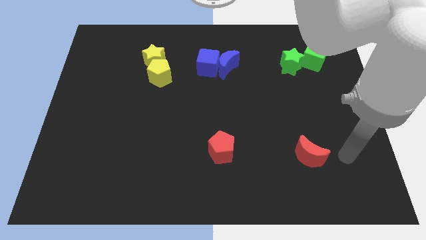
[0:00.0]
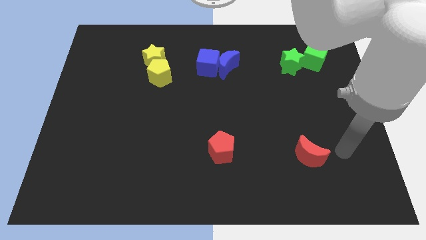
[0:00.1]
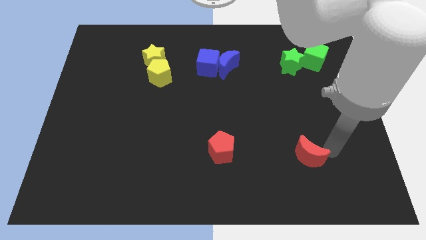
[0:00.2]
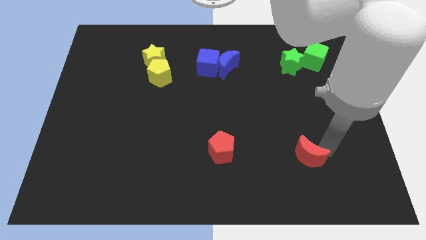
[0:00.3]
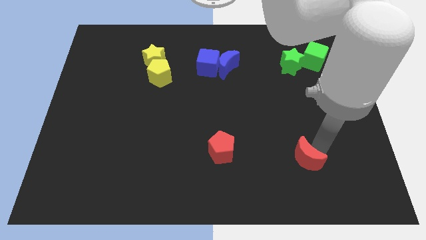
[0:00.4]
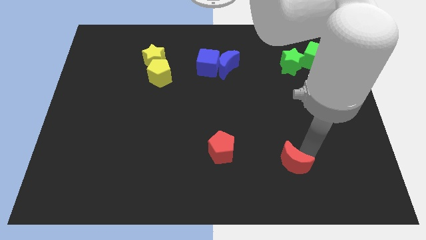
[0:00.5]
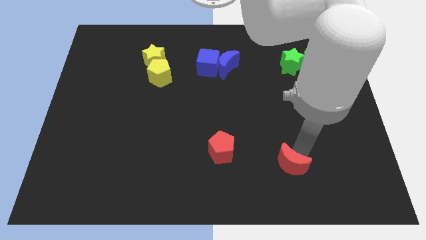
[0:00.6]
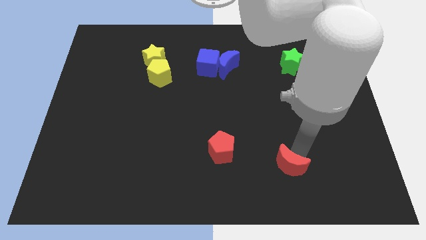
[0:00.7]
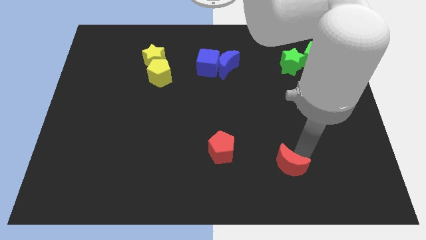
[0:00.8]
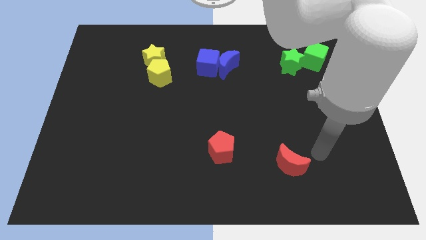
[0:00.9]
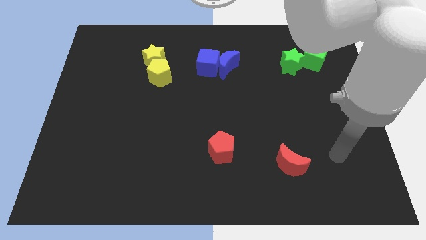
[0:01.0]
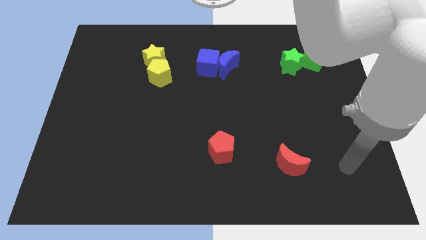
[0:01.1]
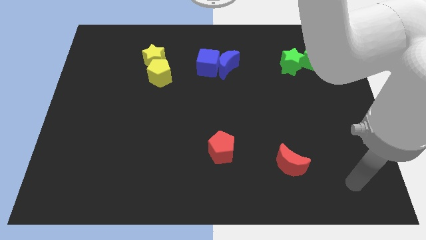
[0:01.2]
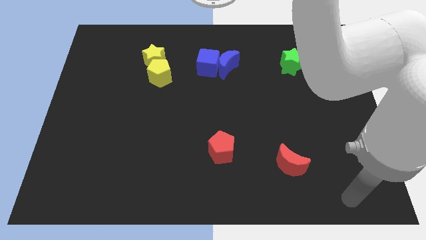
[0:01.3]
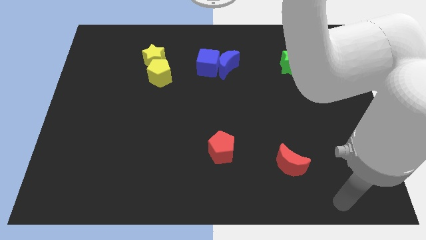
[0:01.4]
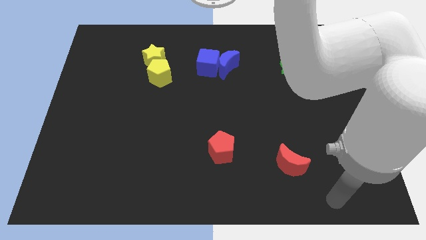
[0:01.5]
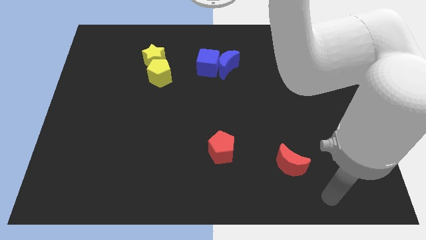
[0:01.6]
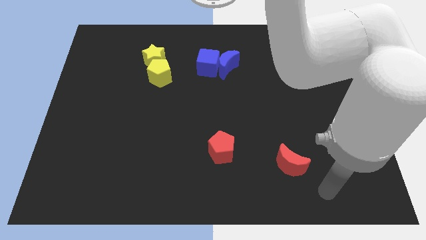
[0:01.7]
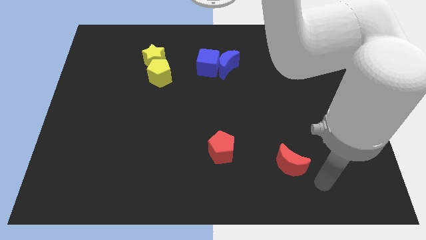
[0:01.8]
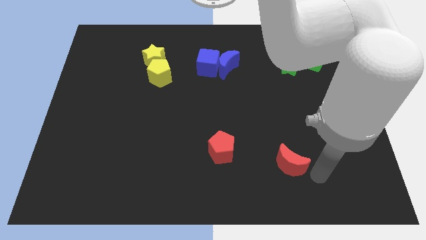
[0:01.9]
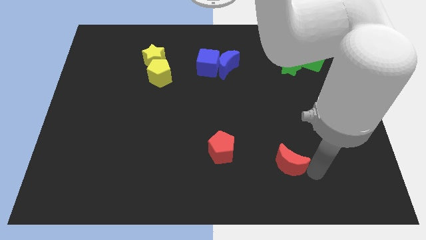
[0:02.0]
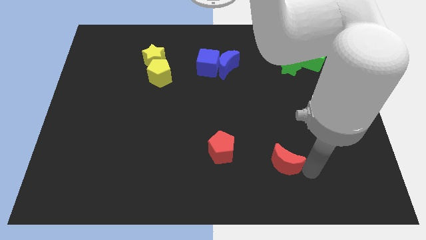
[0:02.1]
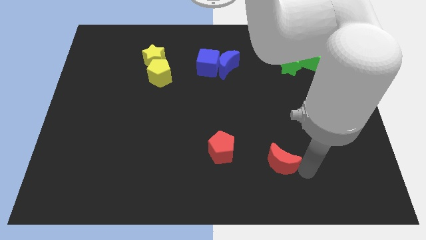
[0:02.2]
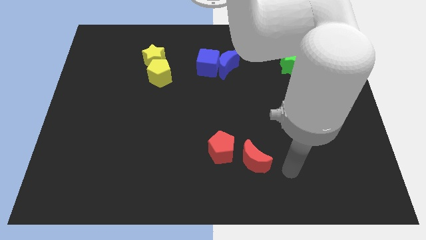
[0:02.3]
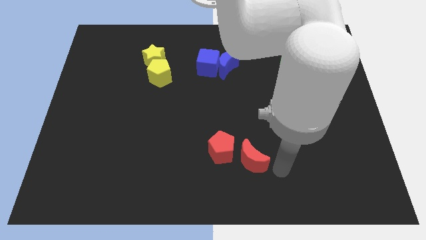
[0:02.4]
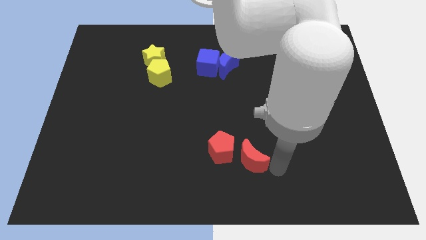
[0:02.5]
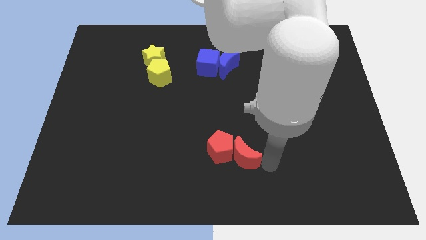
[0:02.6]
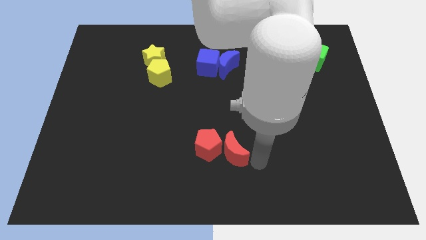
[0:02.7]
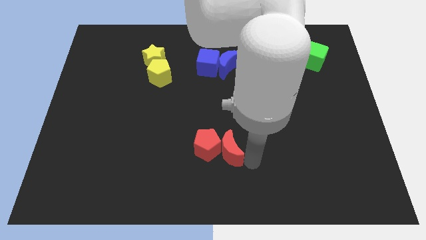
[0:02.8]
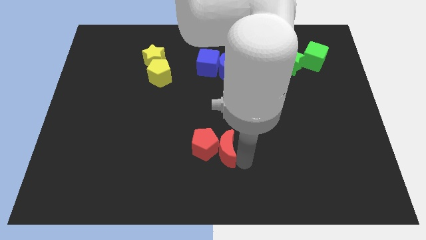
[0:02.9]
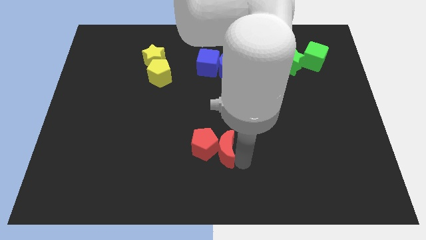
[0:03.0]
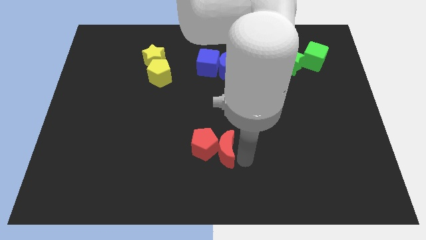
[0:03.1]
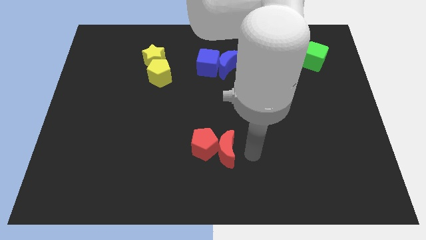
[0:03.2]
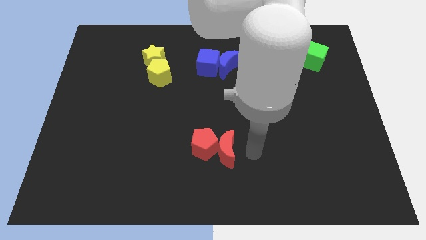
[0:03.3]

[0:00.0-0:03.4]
move the red moon into the red pentagon

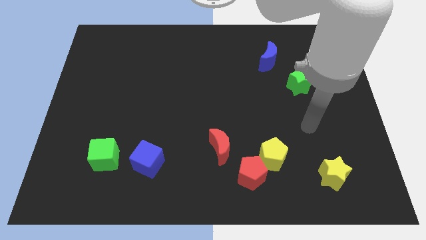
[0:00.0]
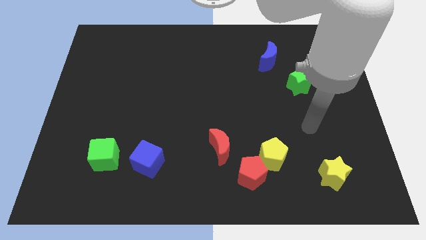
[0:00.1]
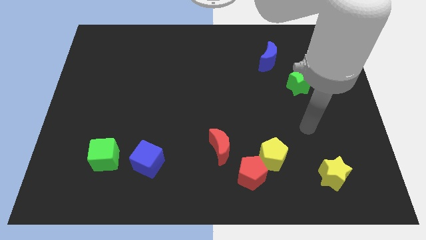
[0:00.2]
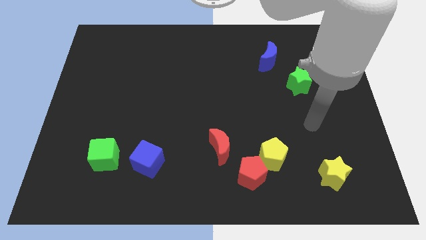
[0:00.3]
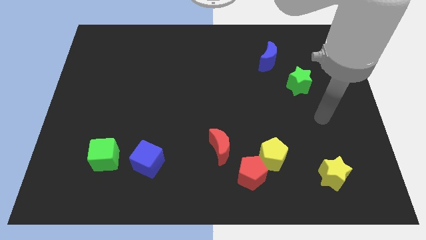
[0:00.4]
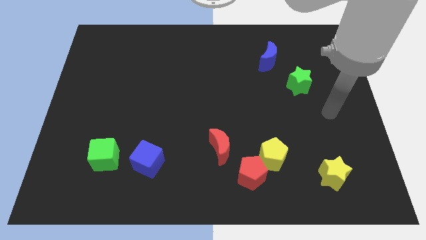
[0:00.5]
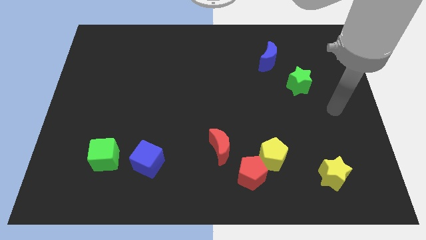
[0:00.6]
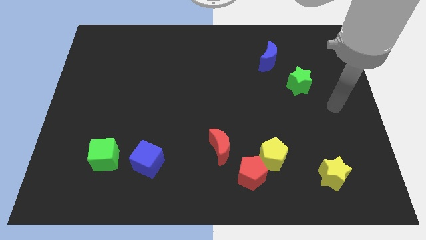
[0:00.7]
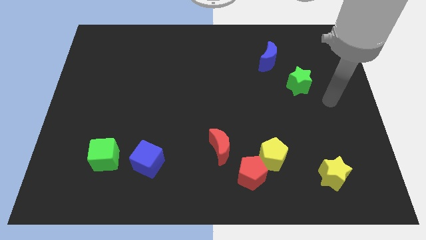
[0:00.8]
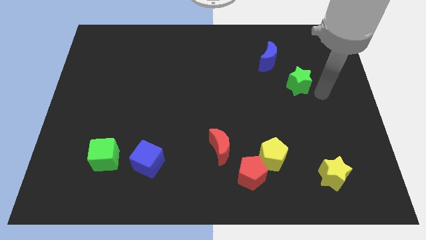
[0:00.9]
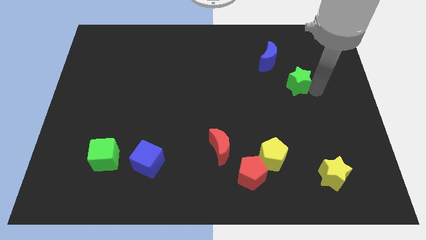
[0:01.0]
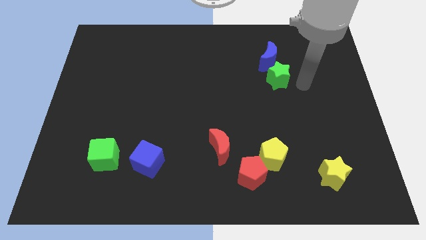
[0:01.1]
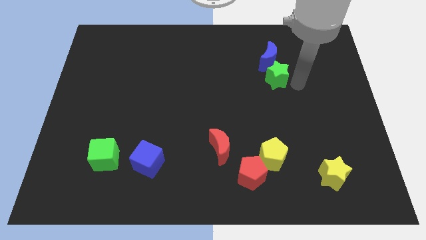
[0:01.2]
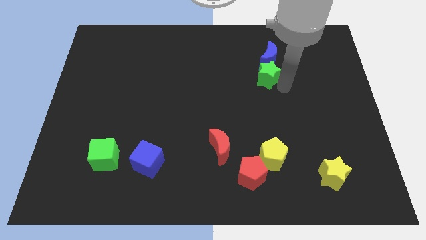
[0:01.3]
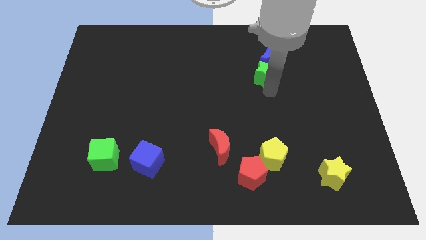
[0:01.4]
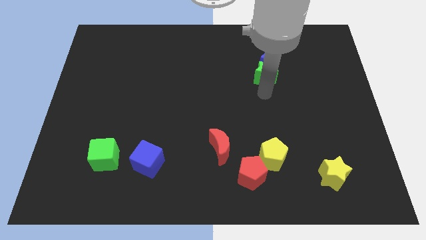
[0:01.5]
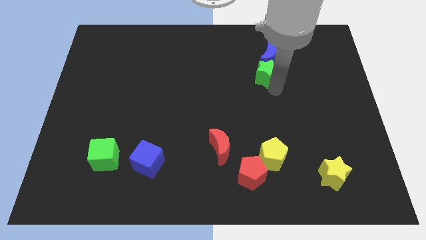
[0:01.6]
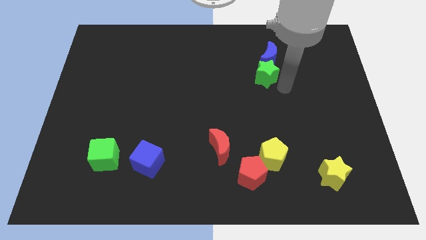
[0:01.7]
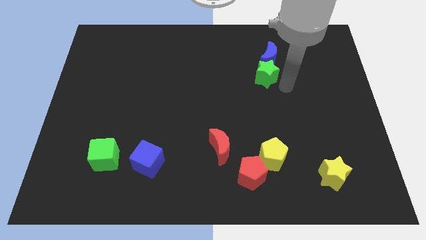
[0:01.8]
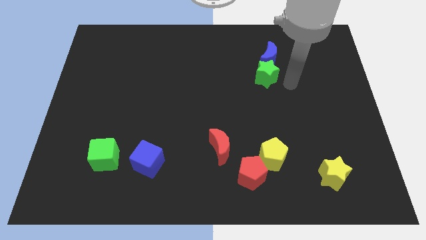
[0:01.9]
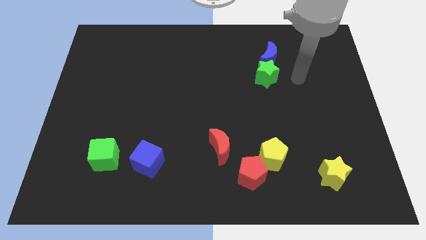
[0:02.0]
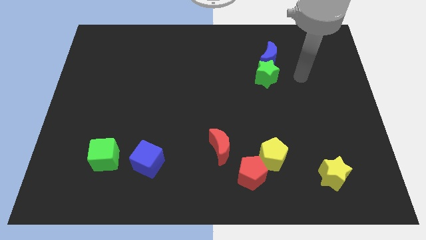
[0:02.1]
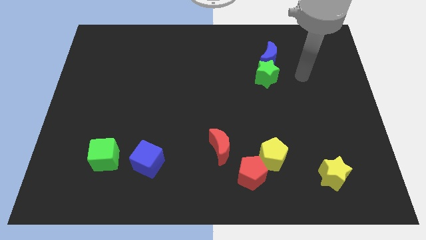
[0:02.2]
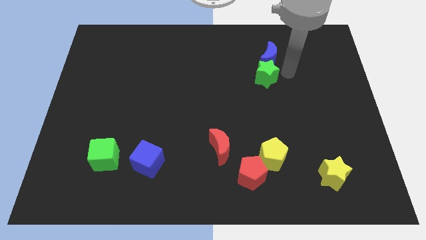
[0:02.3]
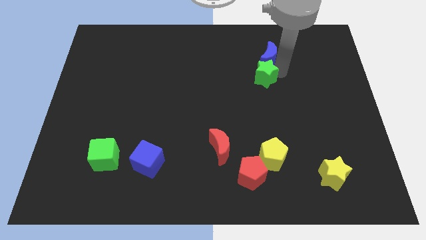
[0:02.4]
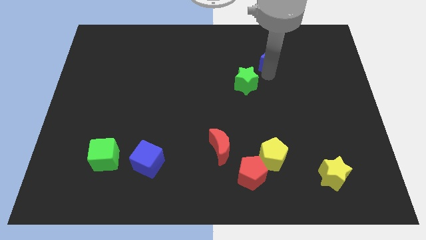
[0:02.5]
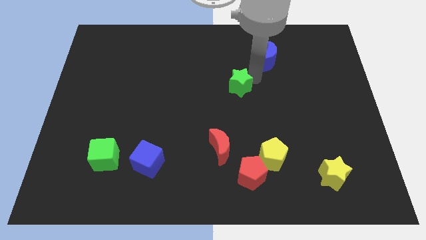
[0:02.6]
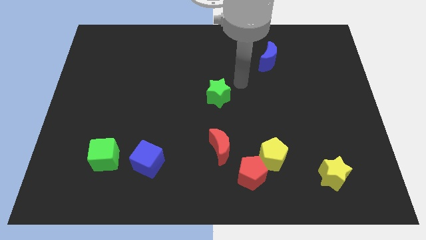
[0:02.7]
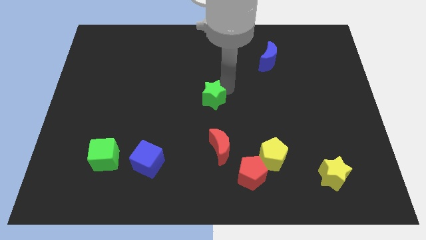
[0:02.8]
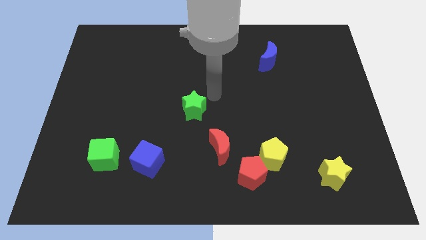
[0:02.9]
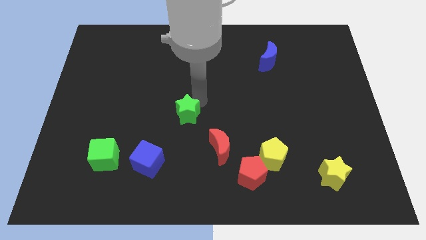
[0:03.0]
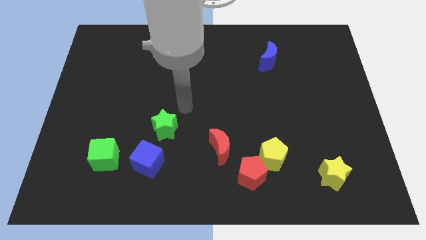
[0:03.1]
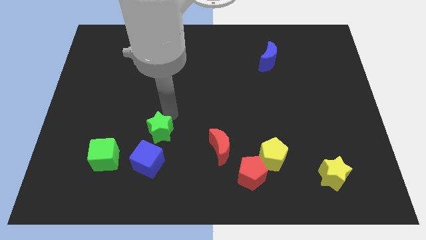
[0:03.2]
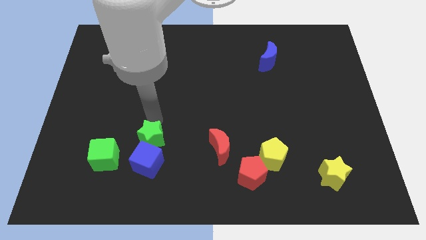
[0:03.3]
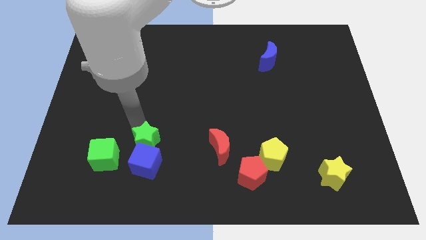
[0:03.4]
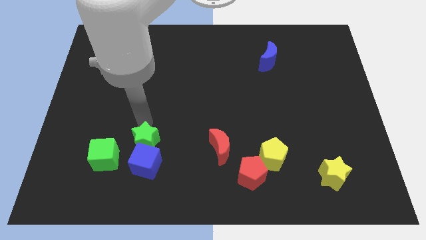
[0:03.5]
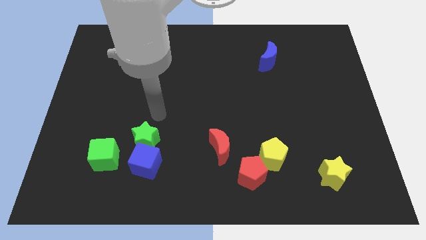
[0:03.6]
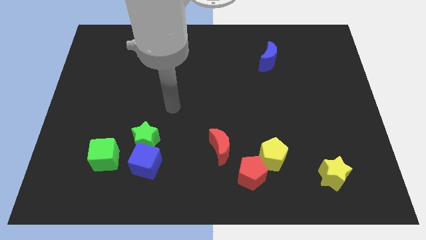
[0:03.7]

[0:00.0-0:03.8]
put the green star at the top of the blue cube

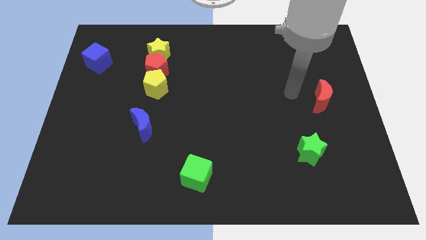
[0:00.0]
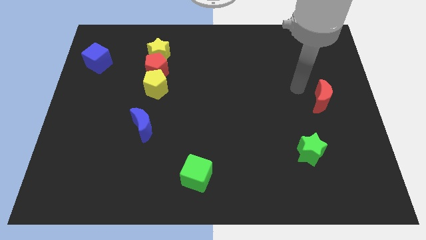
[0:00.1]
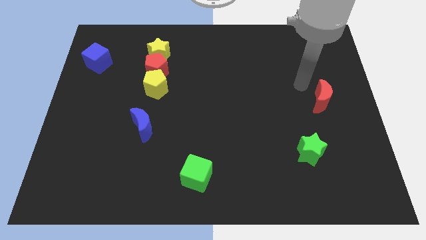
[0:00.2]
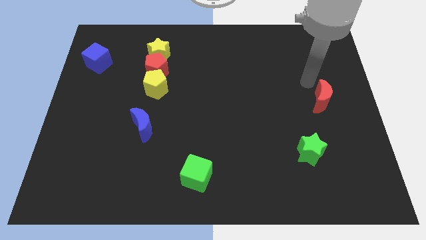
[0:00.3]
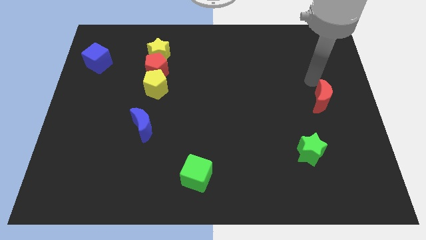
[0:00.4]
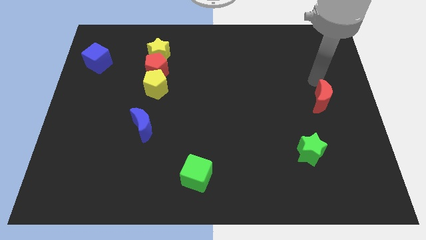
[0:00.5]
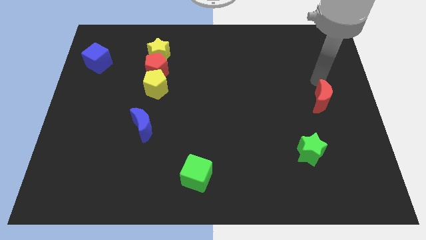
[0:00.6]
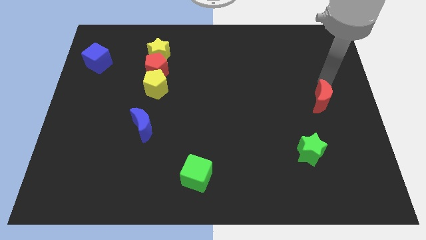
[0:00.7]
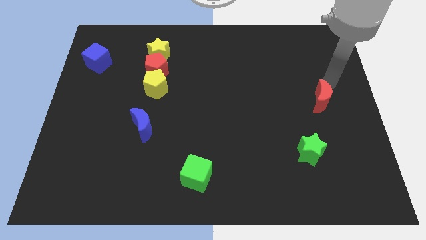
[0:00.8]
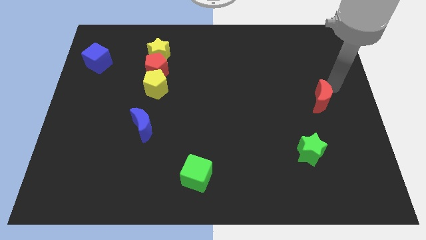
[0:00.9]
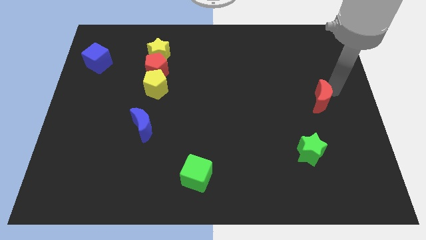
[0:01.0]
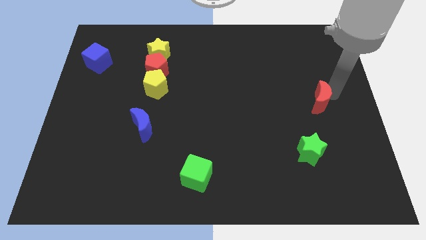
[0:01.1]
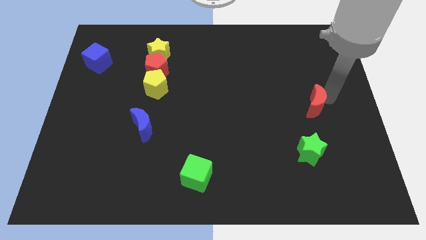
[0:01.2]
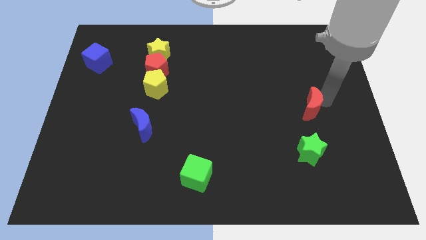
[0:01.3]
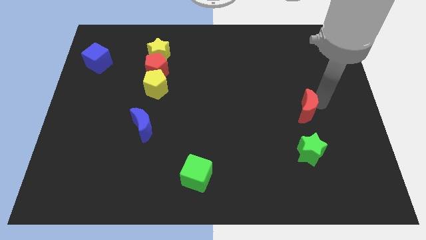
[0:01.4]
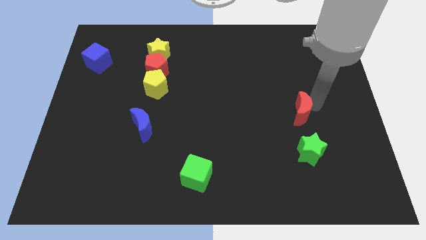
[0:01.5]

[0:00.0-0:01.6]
place red moon above green star
